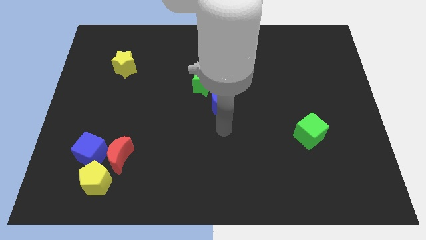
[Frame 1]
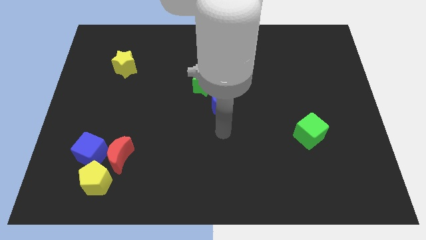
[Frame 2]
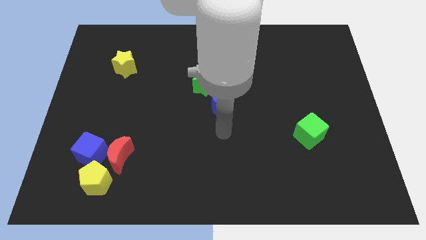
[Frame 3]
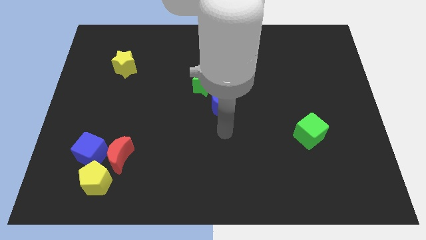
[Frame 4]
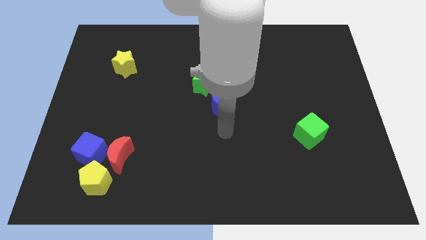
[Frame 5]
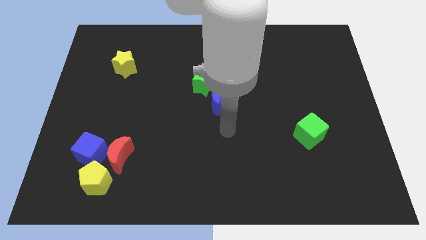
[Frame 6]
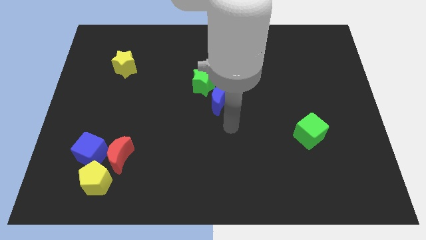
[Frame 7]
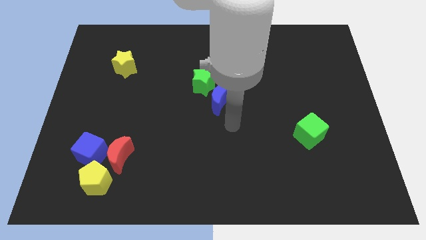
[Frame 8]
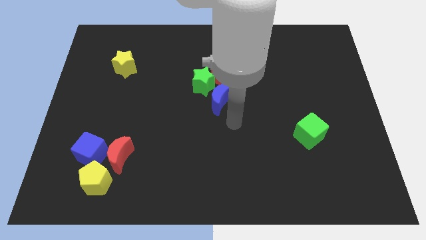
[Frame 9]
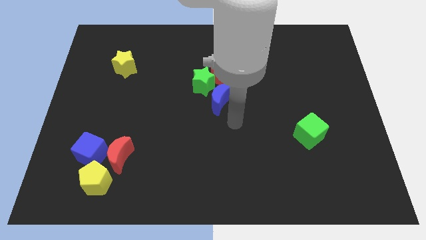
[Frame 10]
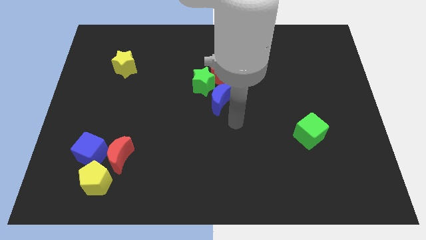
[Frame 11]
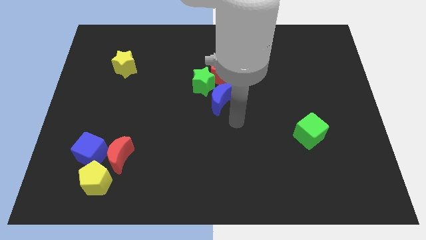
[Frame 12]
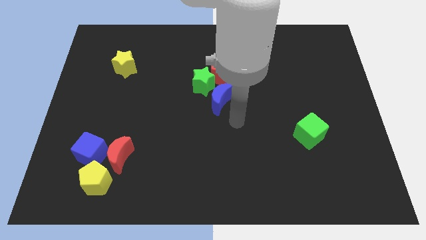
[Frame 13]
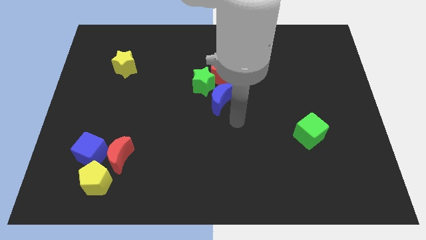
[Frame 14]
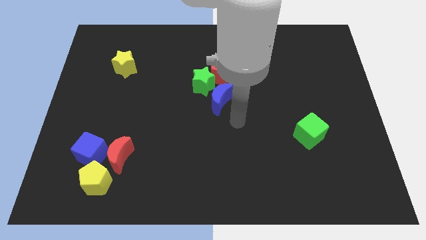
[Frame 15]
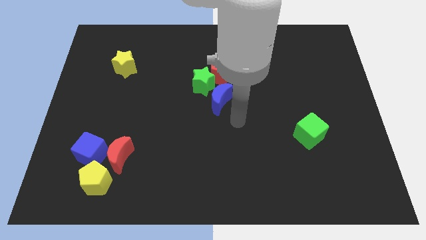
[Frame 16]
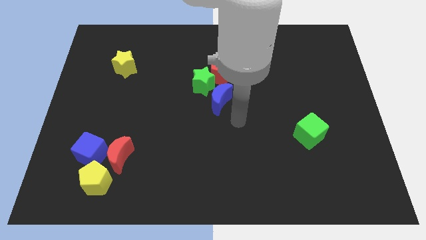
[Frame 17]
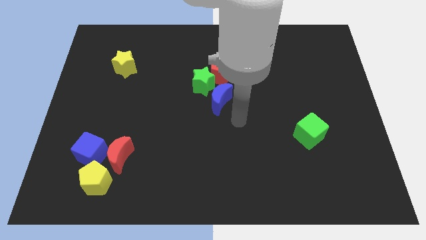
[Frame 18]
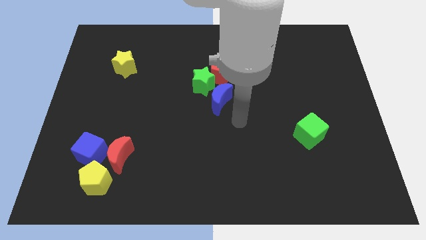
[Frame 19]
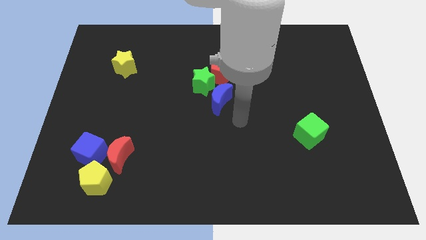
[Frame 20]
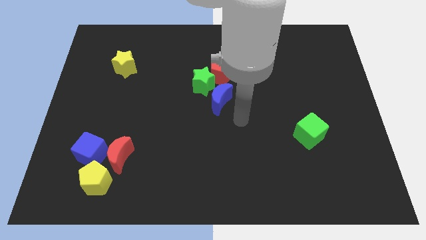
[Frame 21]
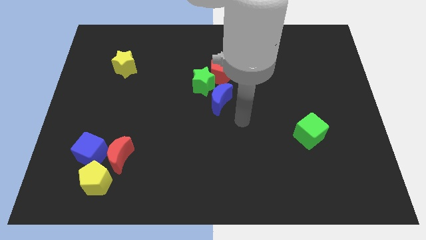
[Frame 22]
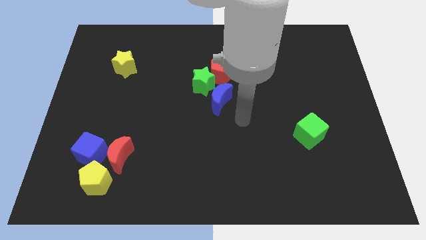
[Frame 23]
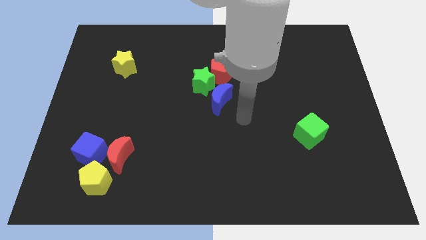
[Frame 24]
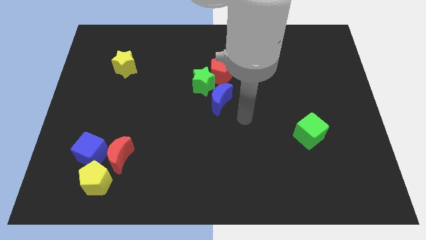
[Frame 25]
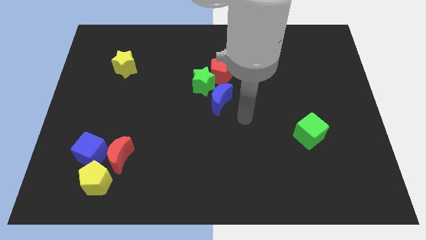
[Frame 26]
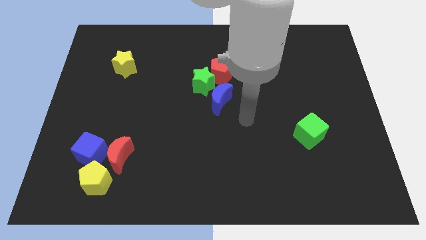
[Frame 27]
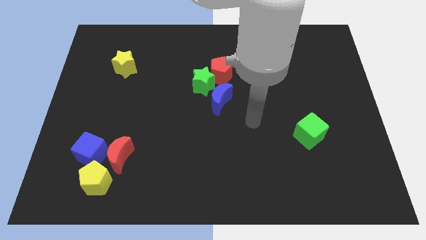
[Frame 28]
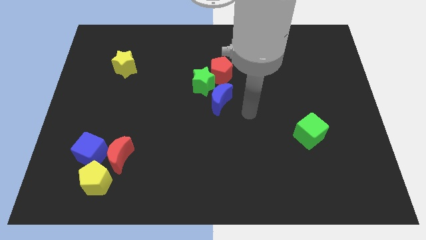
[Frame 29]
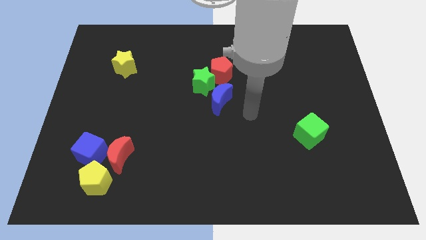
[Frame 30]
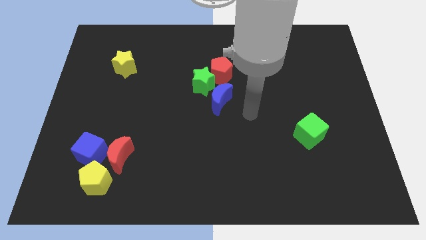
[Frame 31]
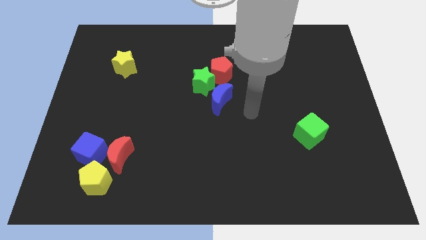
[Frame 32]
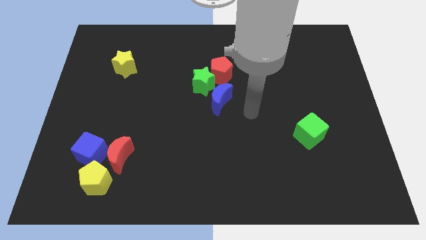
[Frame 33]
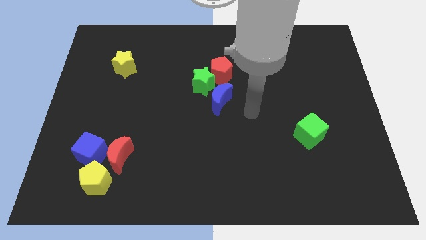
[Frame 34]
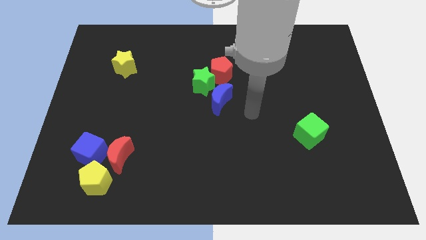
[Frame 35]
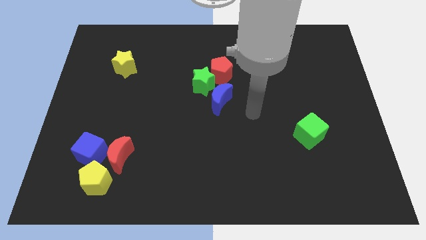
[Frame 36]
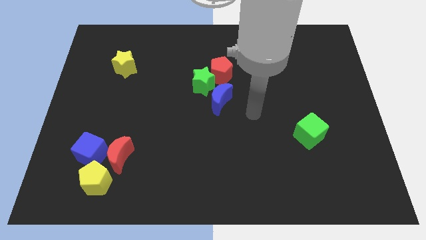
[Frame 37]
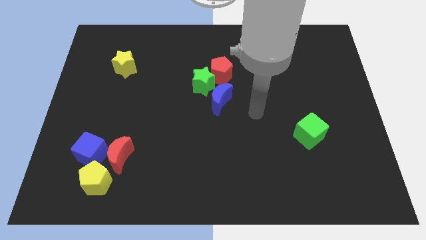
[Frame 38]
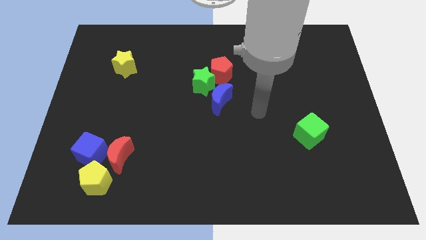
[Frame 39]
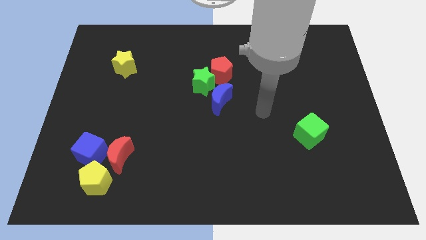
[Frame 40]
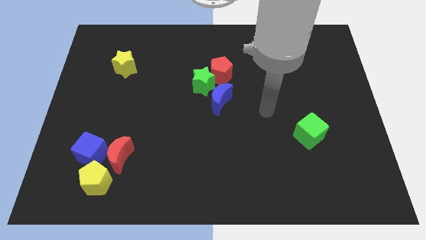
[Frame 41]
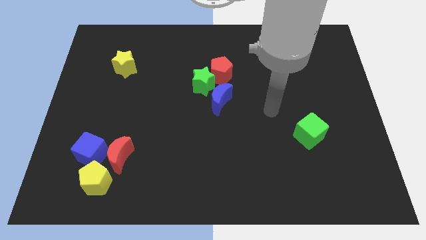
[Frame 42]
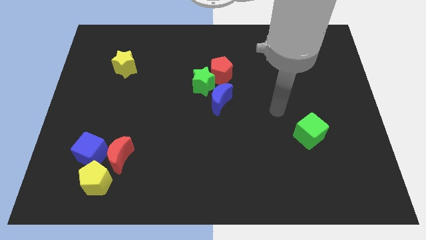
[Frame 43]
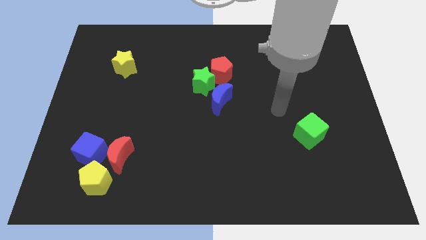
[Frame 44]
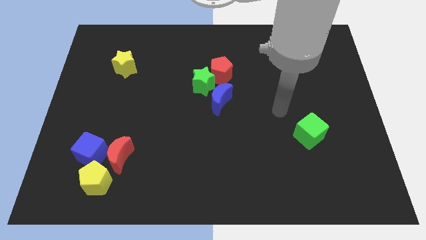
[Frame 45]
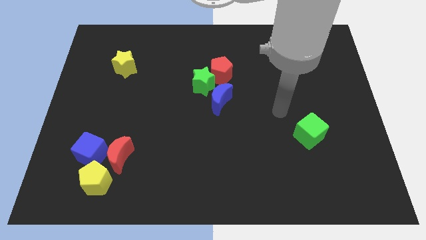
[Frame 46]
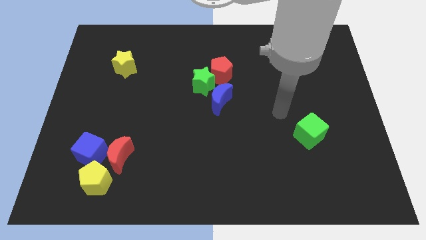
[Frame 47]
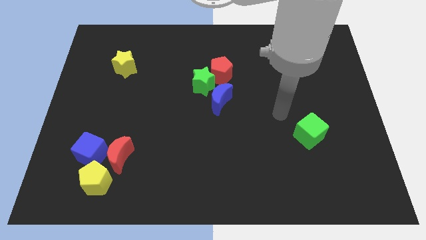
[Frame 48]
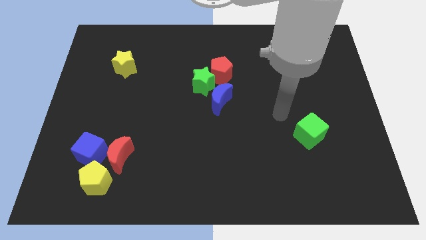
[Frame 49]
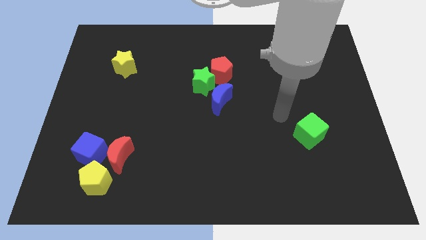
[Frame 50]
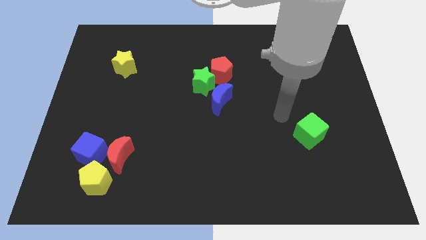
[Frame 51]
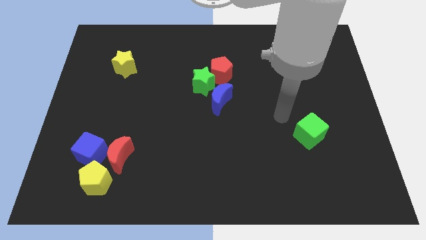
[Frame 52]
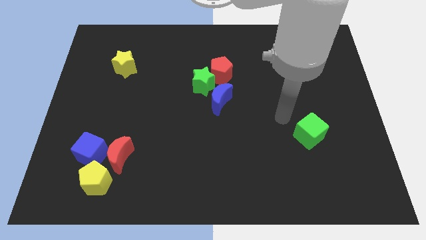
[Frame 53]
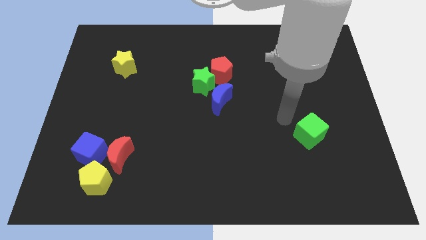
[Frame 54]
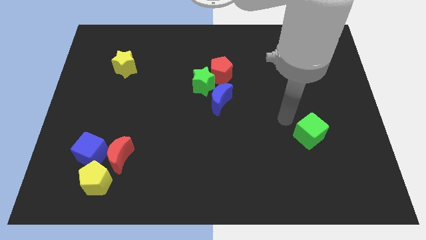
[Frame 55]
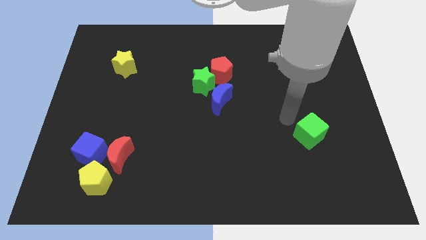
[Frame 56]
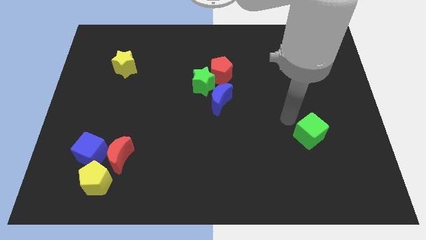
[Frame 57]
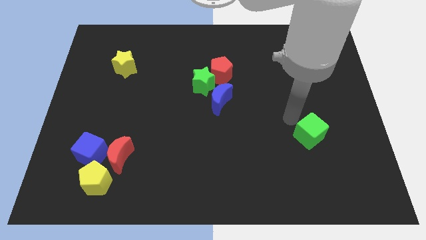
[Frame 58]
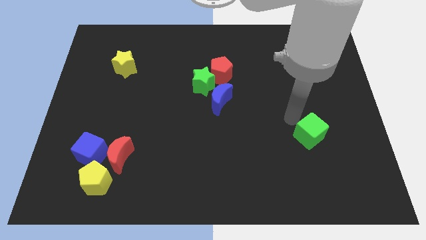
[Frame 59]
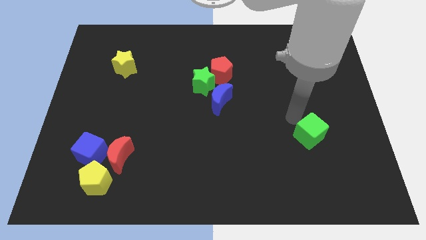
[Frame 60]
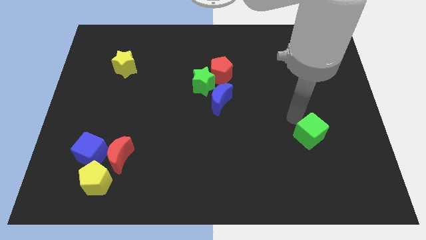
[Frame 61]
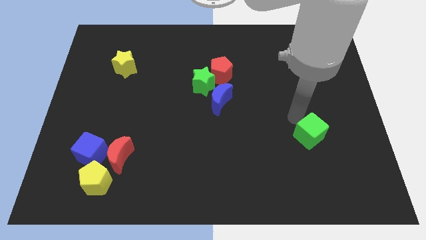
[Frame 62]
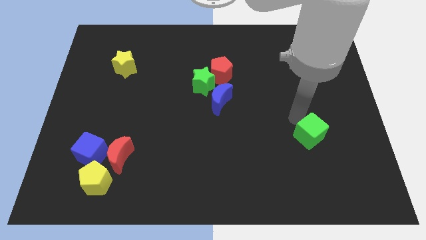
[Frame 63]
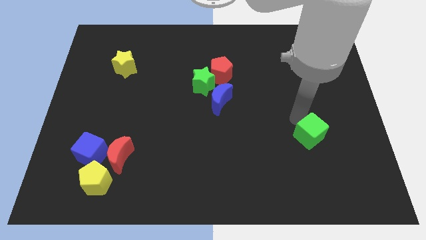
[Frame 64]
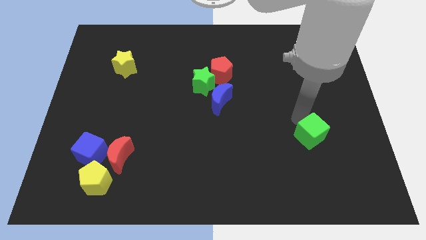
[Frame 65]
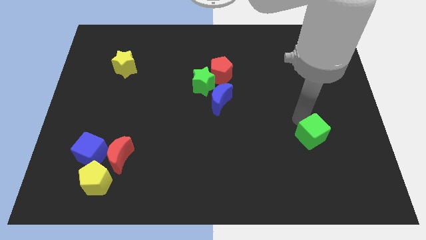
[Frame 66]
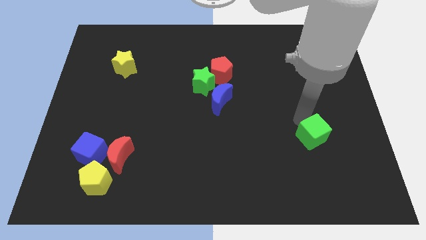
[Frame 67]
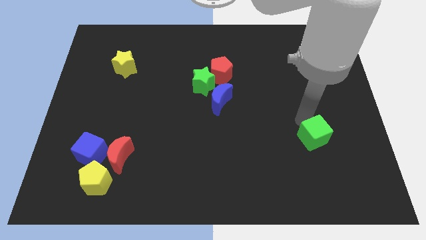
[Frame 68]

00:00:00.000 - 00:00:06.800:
move the green cube slightly to the bottom of the board

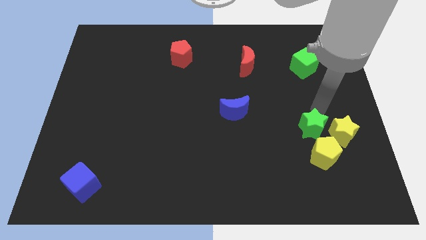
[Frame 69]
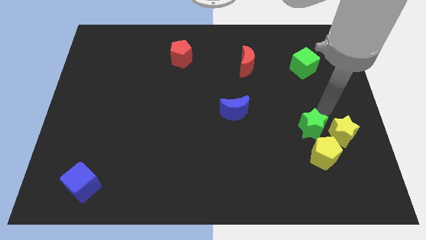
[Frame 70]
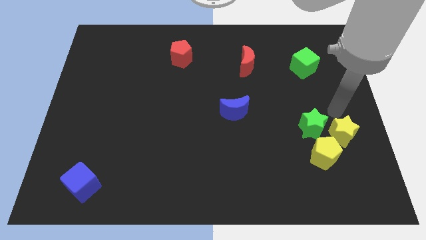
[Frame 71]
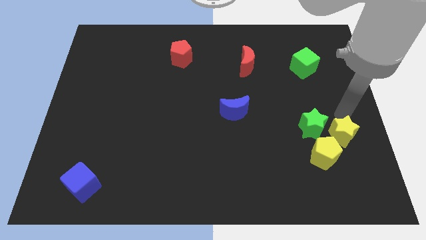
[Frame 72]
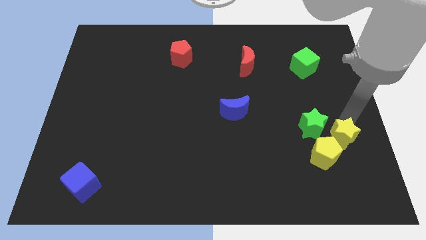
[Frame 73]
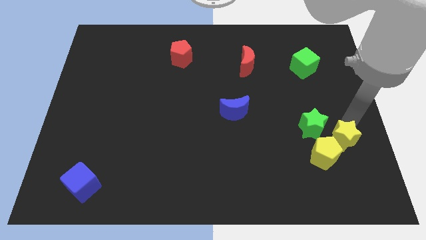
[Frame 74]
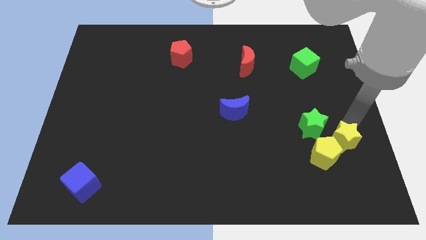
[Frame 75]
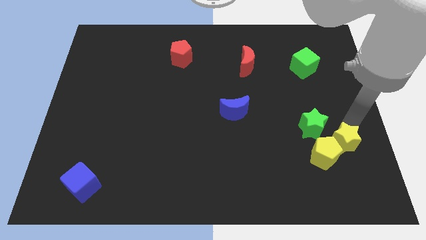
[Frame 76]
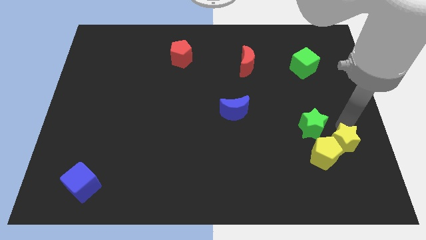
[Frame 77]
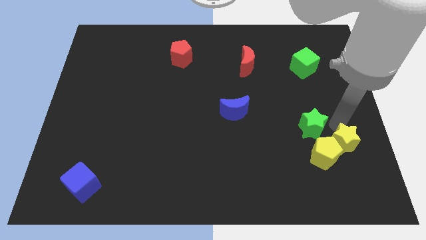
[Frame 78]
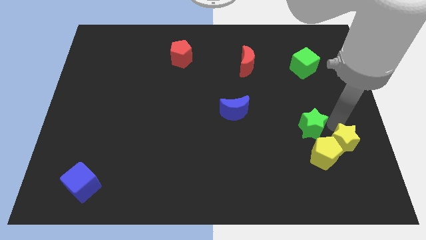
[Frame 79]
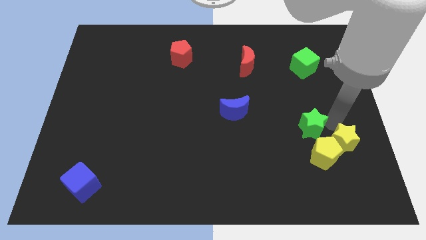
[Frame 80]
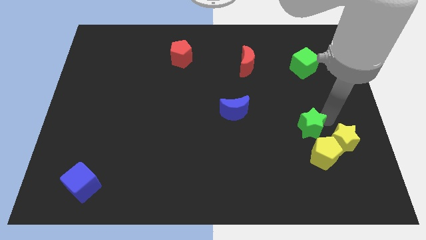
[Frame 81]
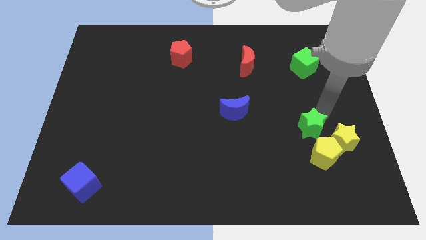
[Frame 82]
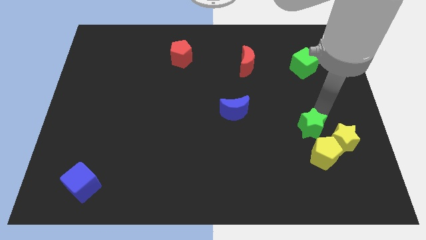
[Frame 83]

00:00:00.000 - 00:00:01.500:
move the yellow star close to the yellow pentagon

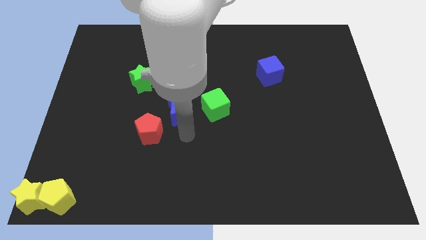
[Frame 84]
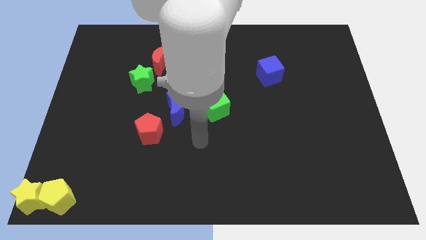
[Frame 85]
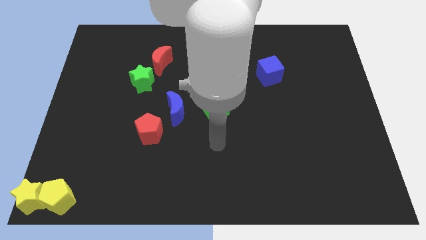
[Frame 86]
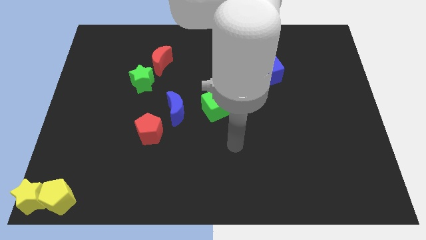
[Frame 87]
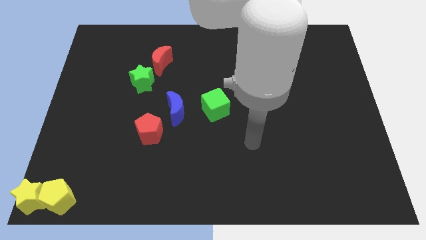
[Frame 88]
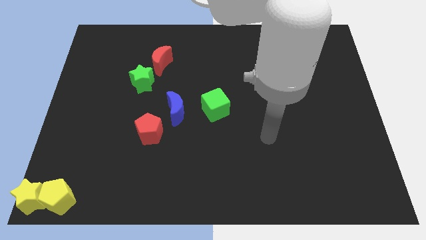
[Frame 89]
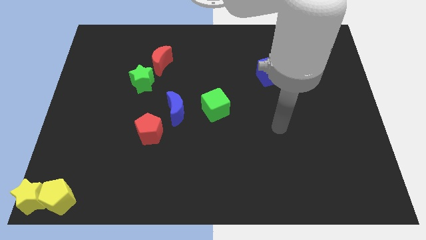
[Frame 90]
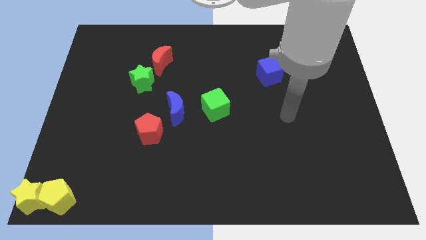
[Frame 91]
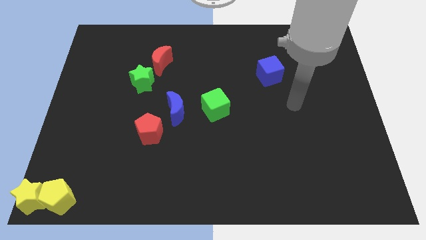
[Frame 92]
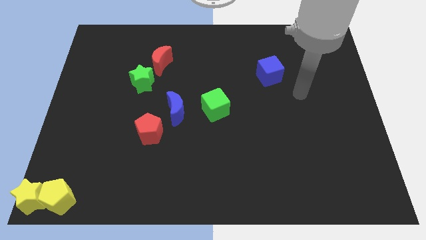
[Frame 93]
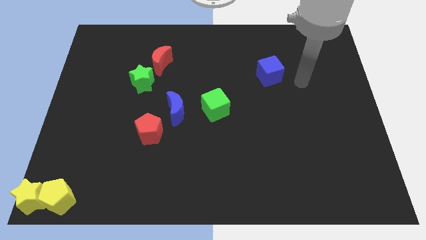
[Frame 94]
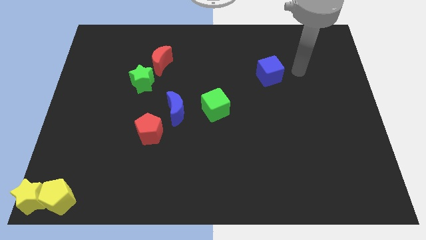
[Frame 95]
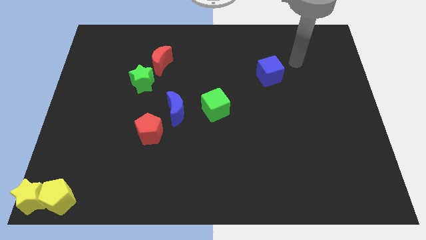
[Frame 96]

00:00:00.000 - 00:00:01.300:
move your arm away from the blue crescent
